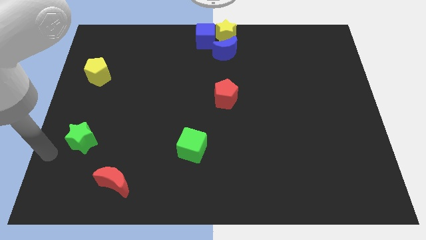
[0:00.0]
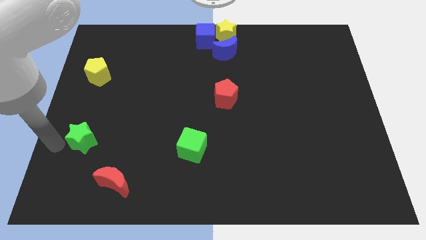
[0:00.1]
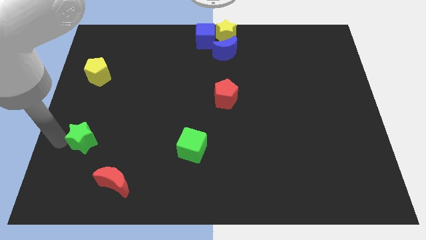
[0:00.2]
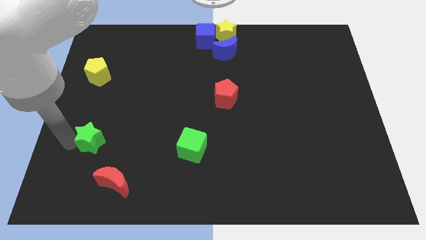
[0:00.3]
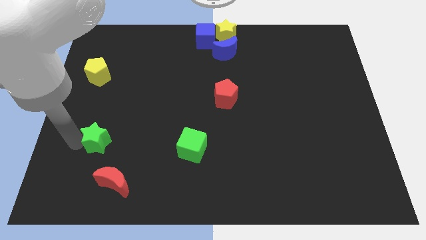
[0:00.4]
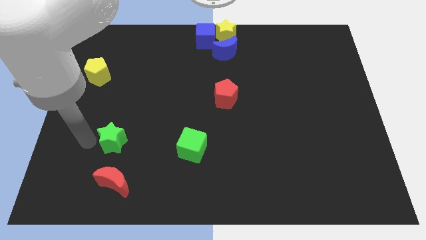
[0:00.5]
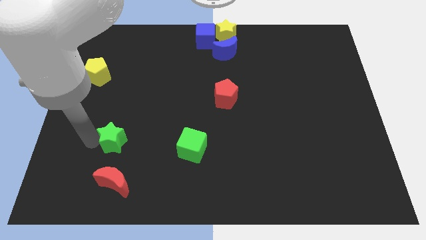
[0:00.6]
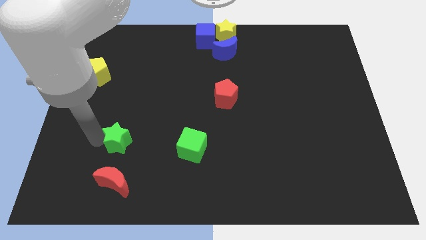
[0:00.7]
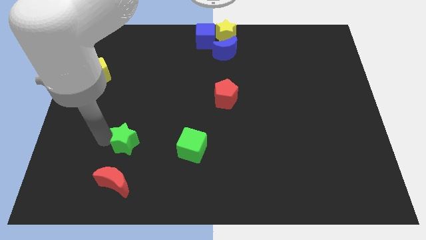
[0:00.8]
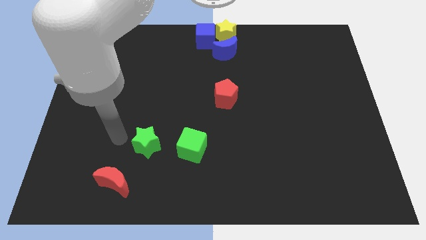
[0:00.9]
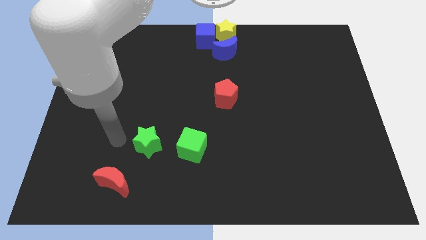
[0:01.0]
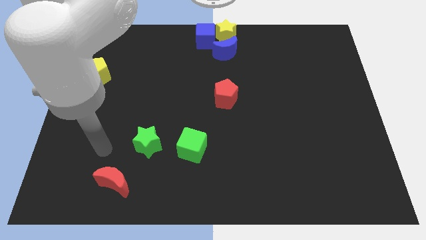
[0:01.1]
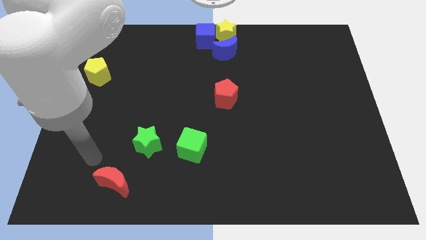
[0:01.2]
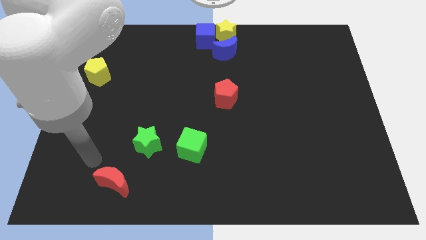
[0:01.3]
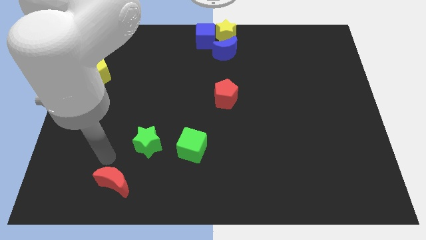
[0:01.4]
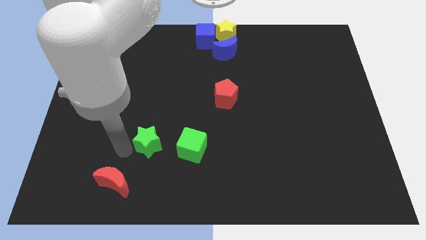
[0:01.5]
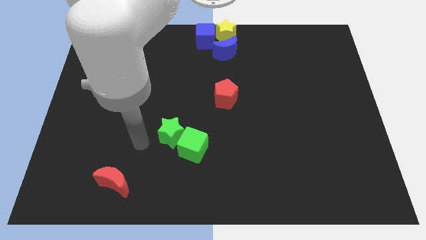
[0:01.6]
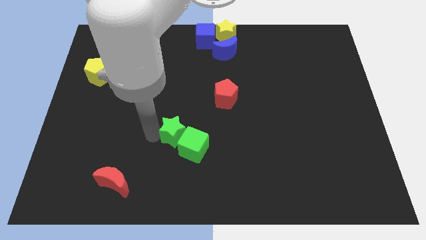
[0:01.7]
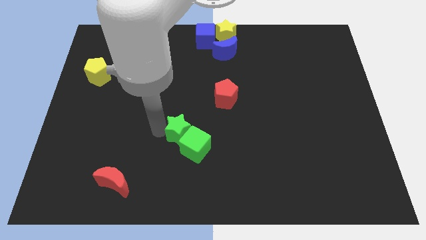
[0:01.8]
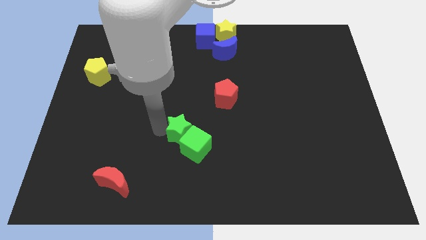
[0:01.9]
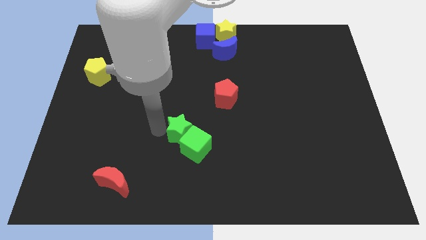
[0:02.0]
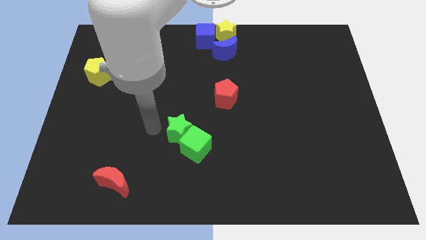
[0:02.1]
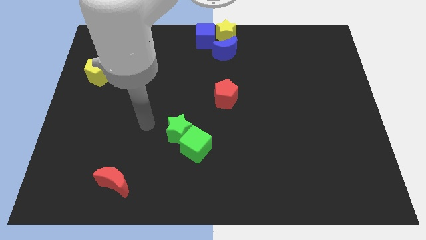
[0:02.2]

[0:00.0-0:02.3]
move the green star into green cube diagonally

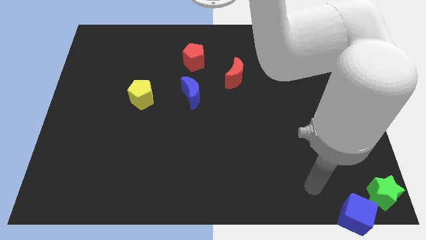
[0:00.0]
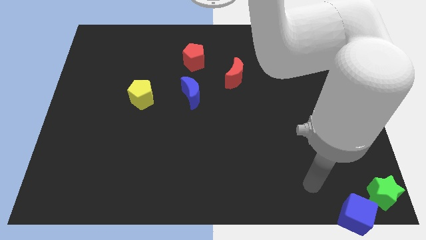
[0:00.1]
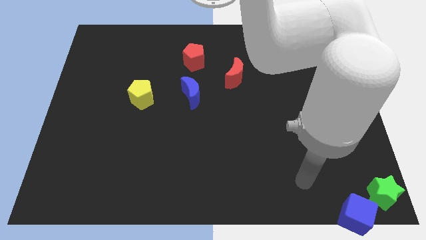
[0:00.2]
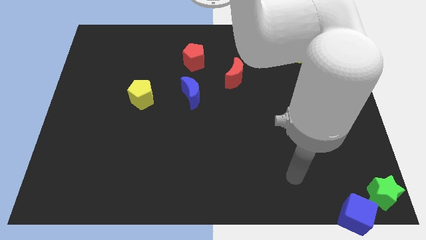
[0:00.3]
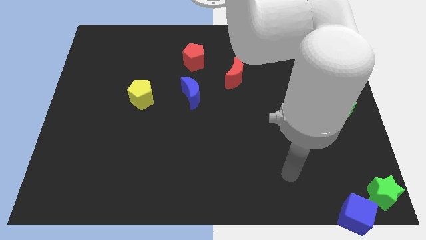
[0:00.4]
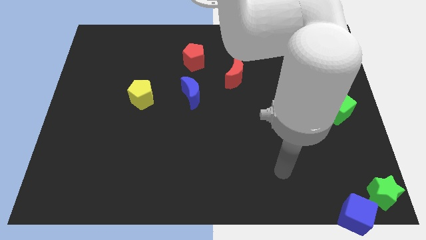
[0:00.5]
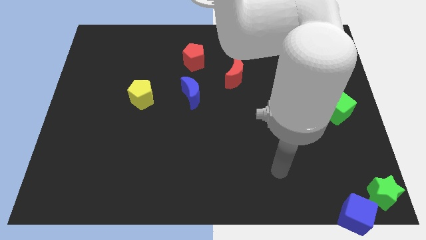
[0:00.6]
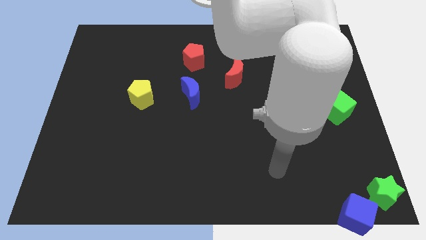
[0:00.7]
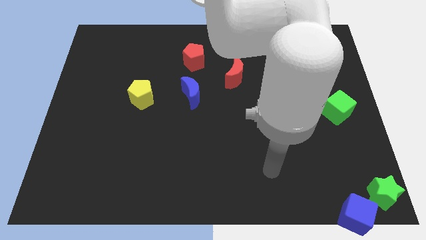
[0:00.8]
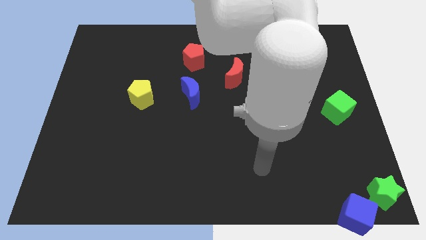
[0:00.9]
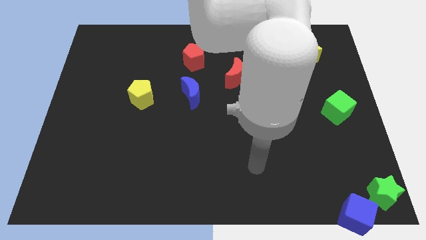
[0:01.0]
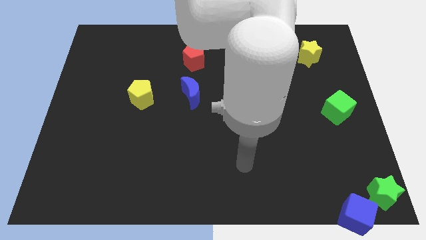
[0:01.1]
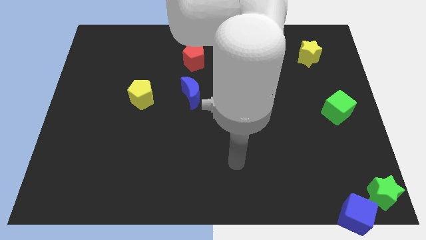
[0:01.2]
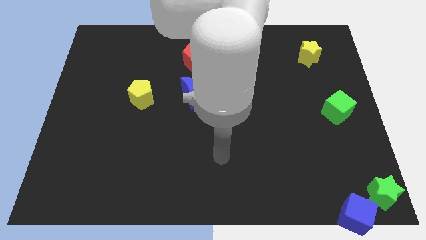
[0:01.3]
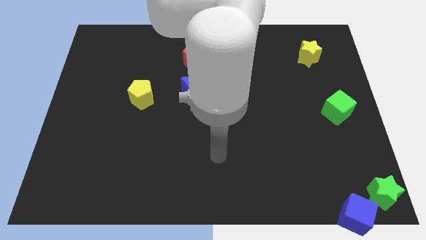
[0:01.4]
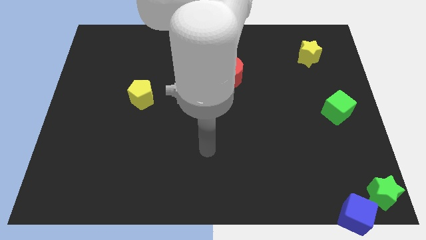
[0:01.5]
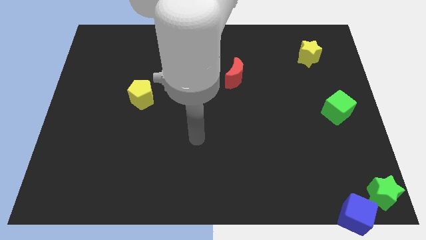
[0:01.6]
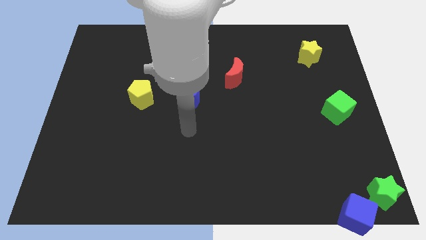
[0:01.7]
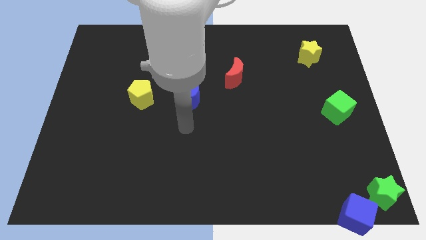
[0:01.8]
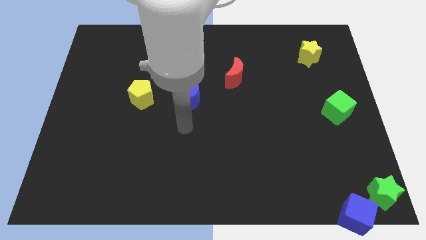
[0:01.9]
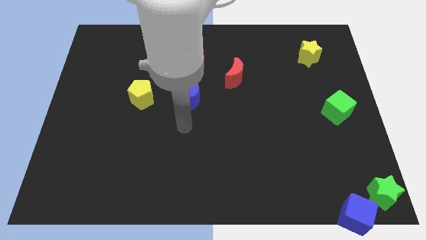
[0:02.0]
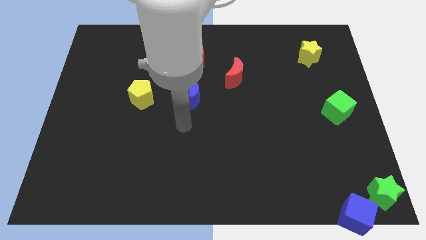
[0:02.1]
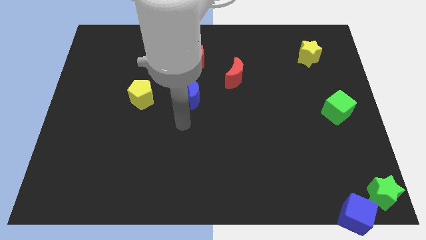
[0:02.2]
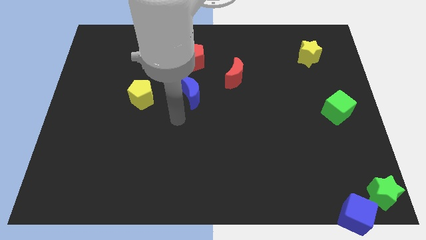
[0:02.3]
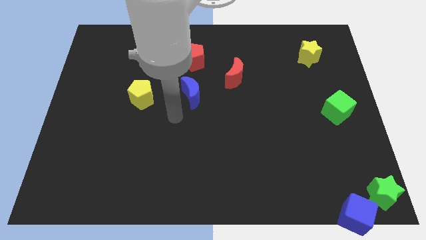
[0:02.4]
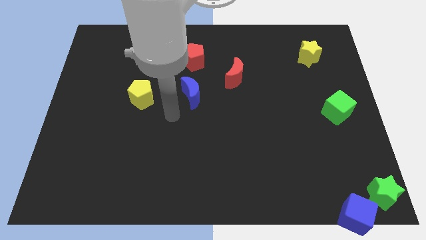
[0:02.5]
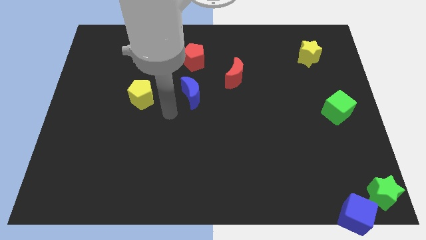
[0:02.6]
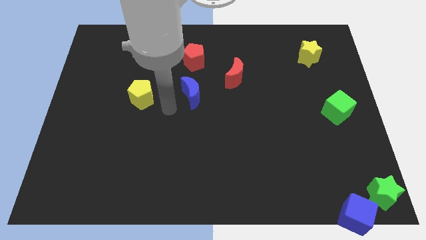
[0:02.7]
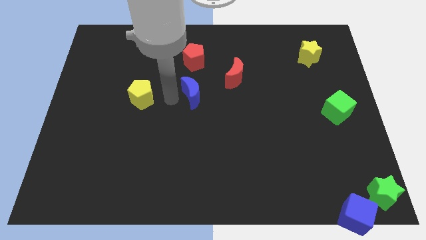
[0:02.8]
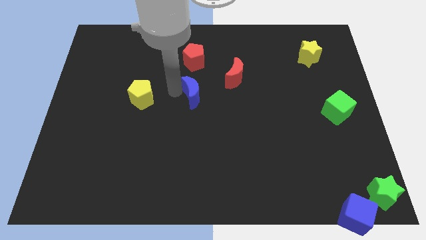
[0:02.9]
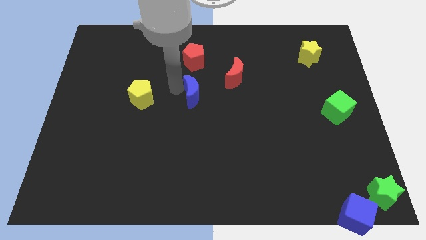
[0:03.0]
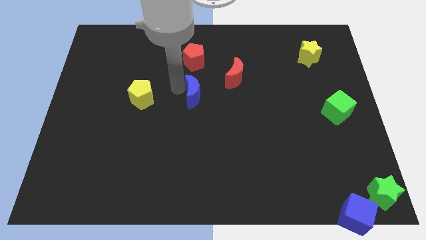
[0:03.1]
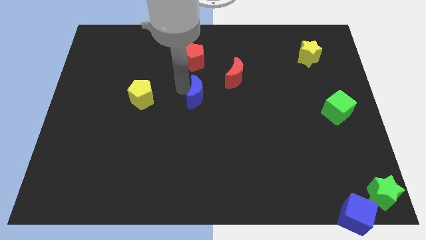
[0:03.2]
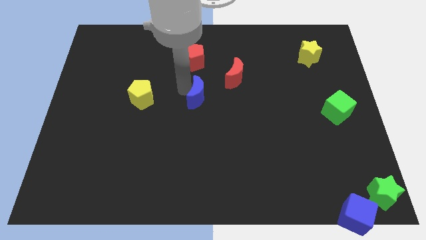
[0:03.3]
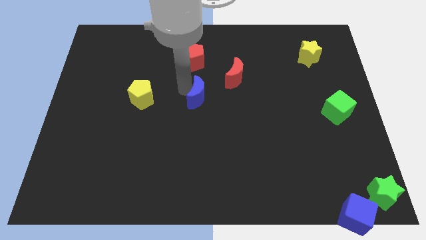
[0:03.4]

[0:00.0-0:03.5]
move the blue crescent to the bottom side of the red pentagon

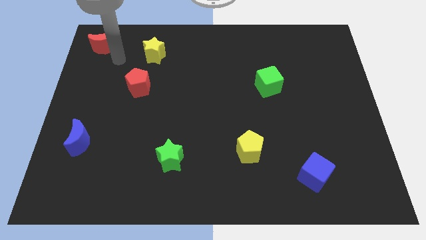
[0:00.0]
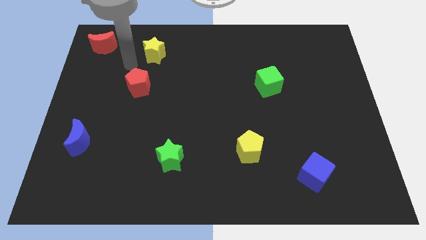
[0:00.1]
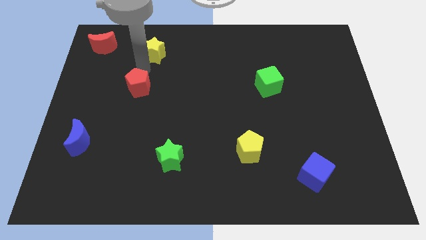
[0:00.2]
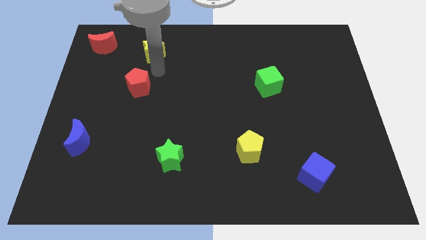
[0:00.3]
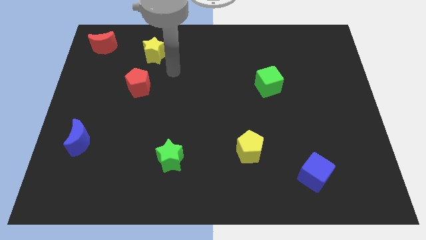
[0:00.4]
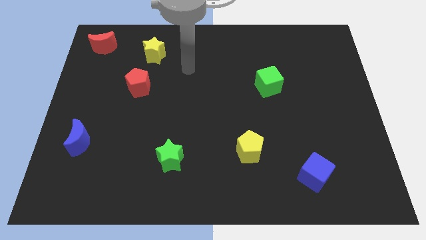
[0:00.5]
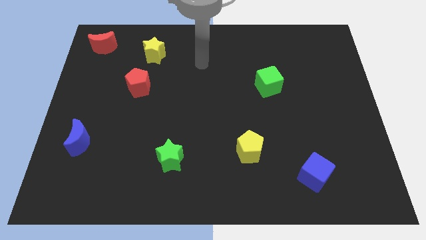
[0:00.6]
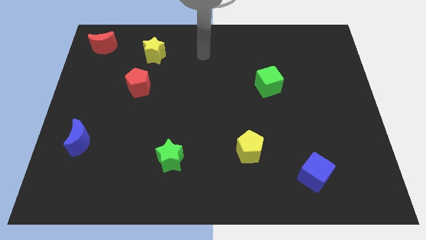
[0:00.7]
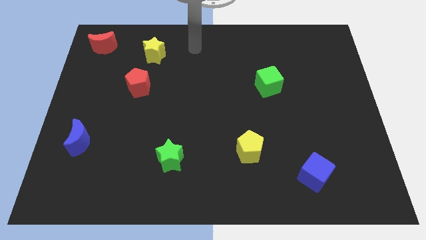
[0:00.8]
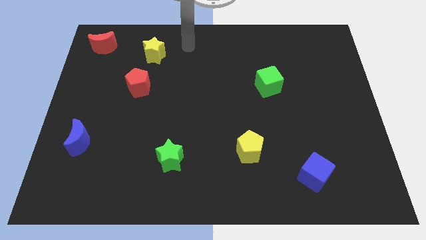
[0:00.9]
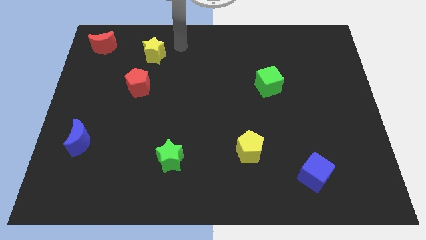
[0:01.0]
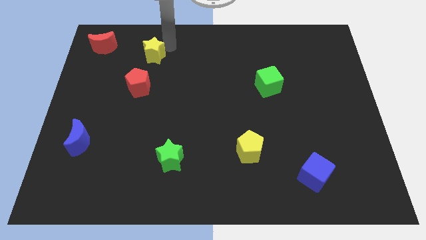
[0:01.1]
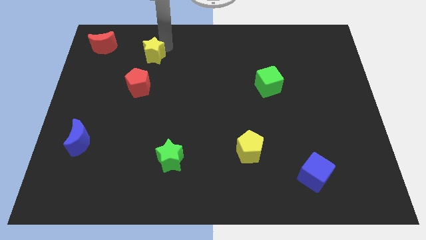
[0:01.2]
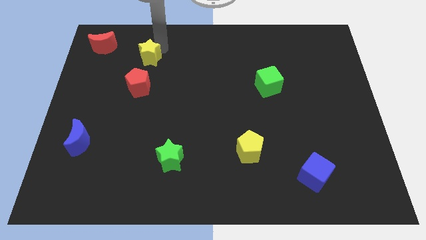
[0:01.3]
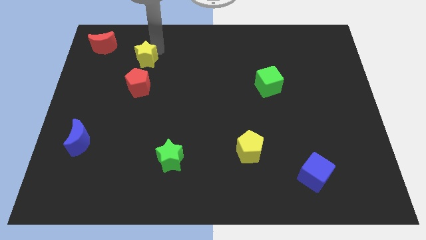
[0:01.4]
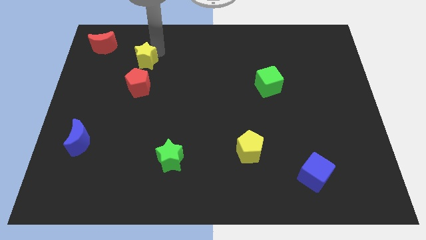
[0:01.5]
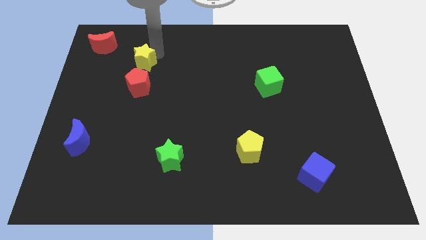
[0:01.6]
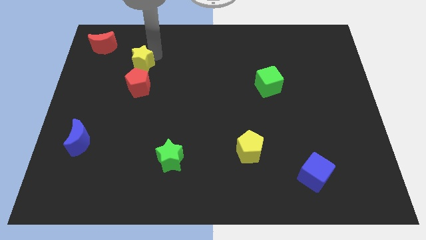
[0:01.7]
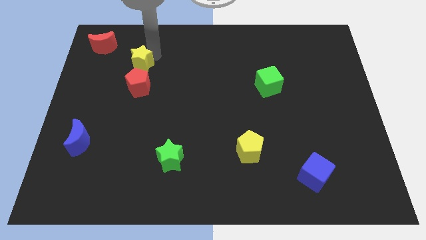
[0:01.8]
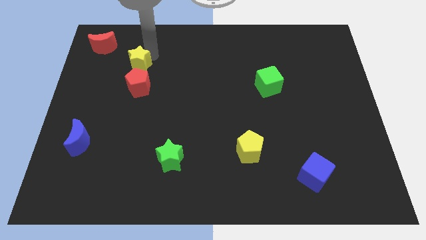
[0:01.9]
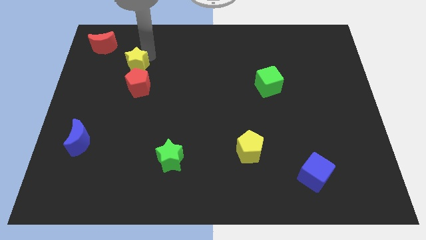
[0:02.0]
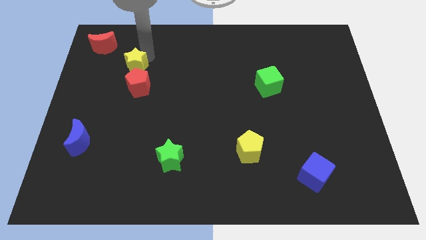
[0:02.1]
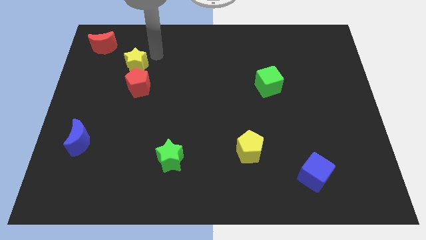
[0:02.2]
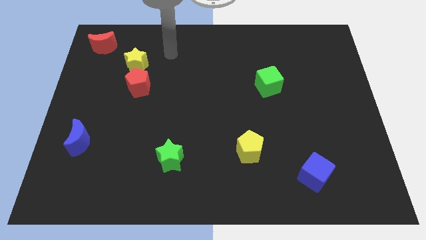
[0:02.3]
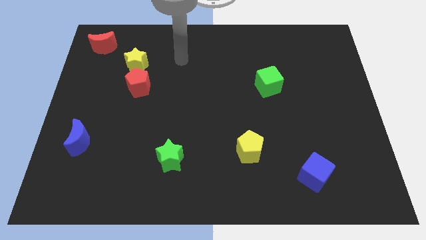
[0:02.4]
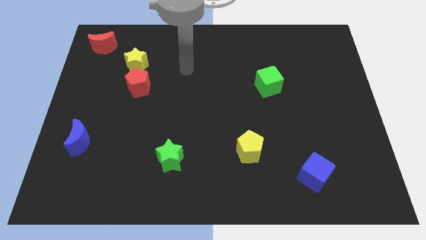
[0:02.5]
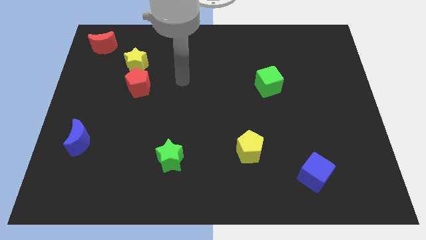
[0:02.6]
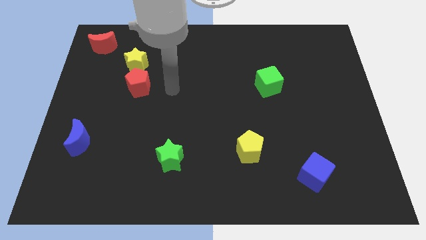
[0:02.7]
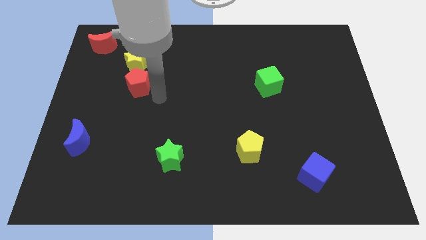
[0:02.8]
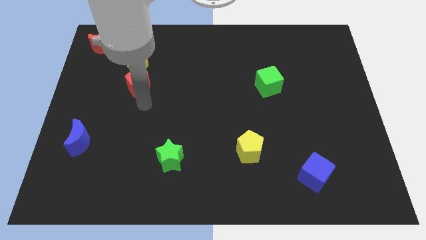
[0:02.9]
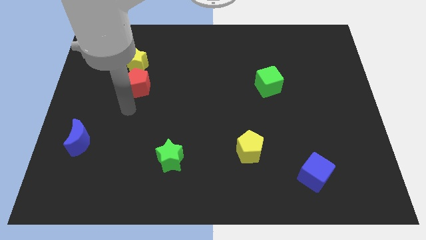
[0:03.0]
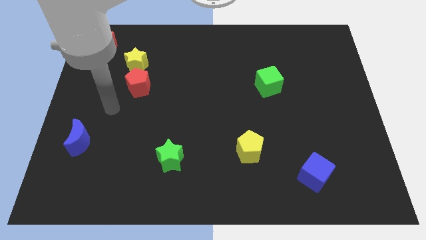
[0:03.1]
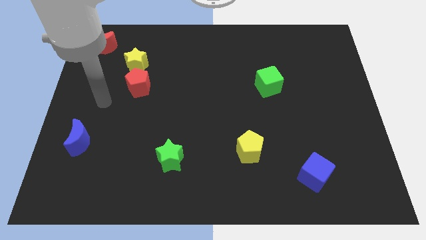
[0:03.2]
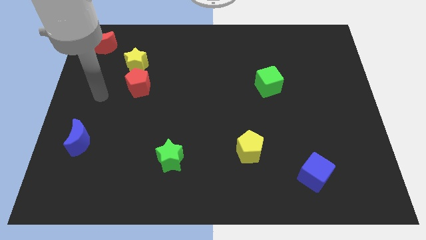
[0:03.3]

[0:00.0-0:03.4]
place the yellow star above the red pentagon
